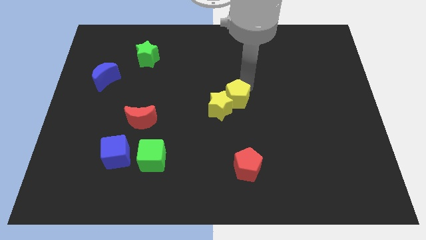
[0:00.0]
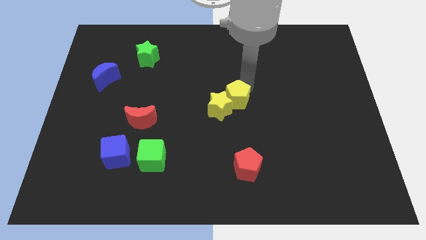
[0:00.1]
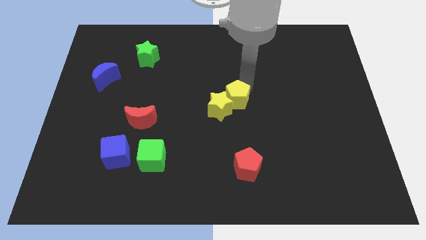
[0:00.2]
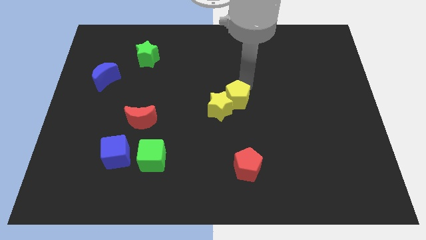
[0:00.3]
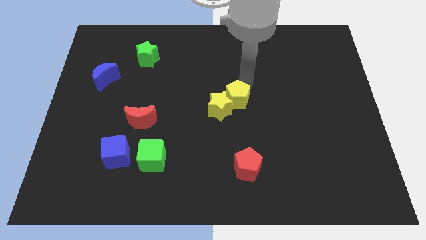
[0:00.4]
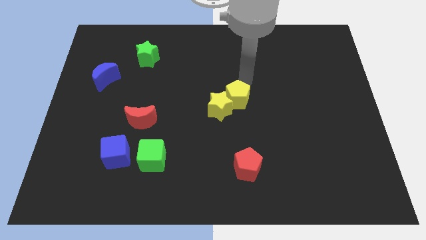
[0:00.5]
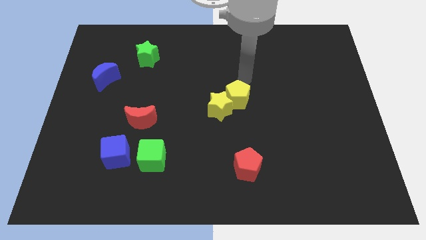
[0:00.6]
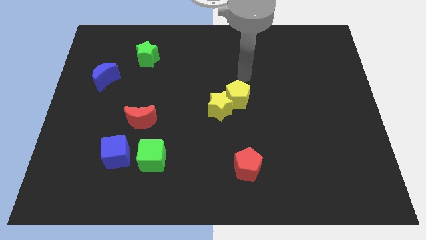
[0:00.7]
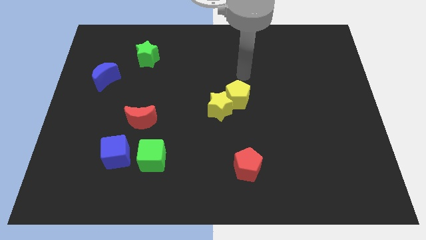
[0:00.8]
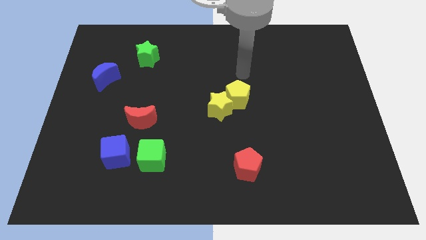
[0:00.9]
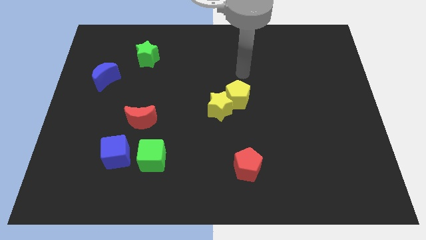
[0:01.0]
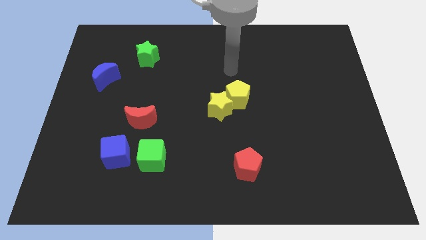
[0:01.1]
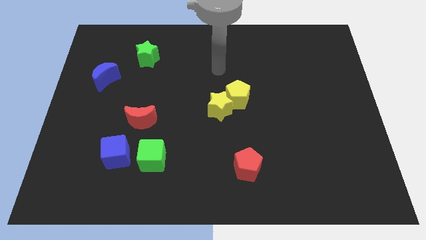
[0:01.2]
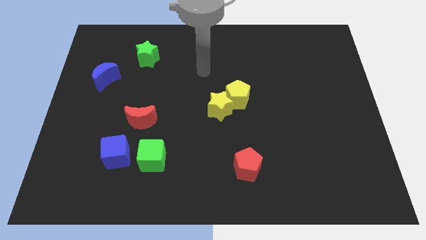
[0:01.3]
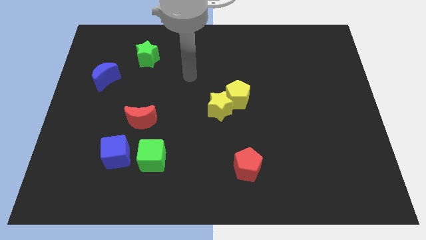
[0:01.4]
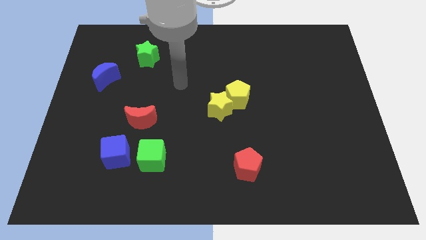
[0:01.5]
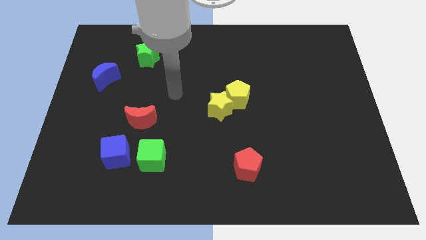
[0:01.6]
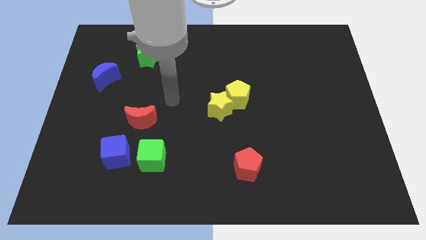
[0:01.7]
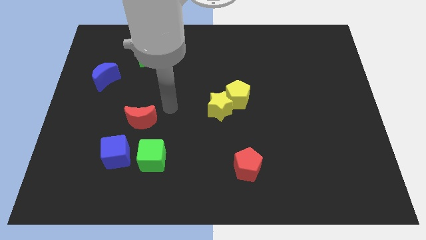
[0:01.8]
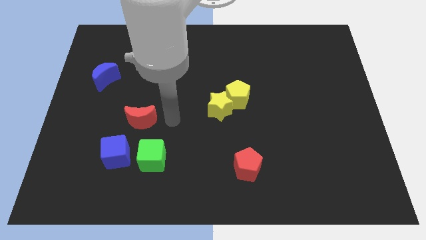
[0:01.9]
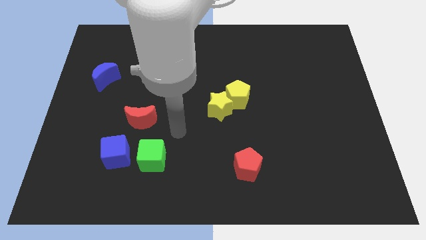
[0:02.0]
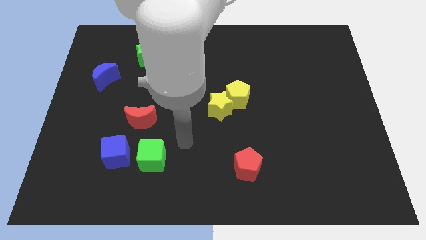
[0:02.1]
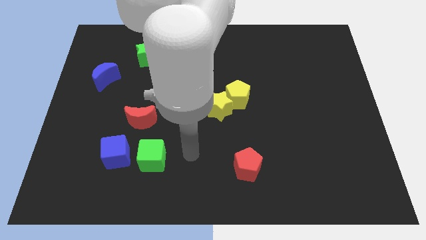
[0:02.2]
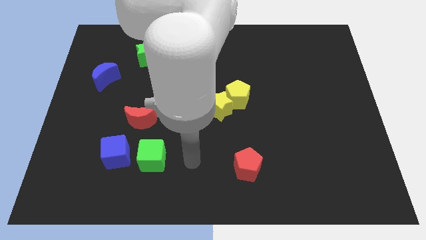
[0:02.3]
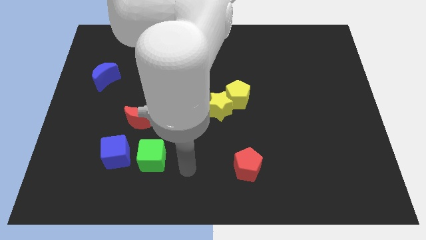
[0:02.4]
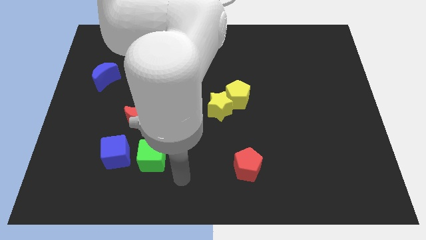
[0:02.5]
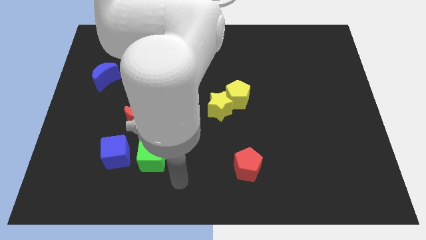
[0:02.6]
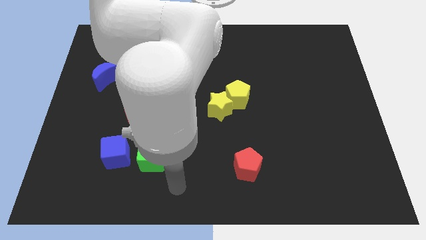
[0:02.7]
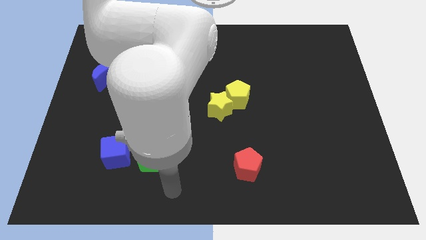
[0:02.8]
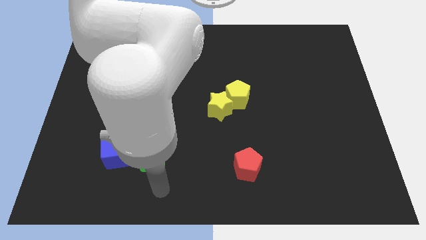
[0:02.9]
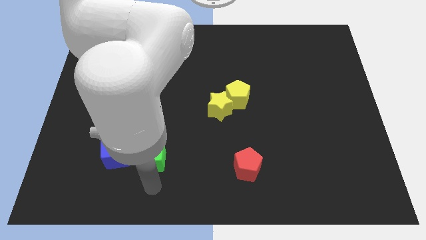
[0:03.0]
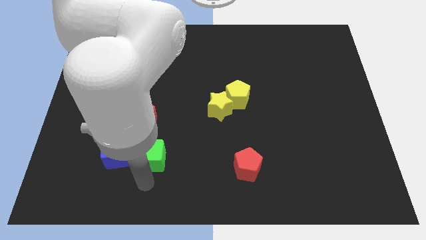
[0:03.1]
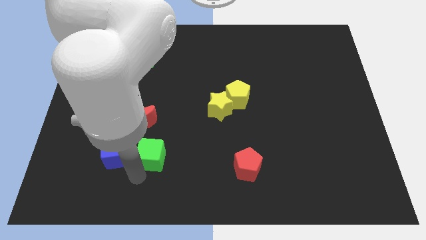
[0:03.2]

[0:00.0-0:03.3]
move the arm at the bottom of the green cube

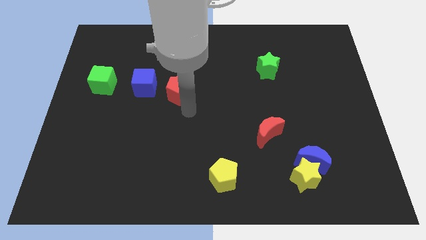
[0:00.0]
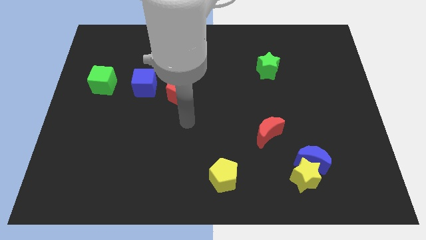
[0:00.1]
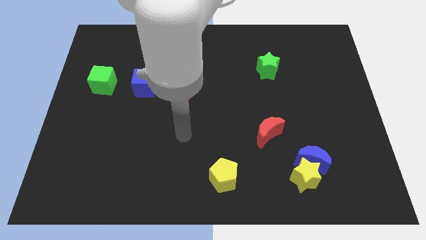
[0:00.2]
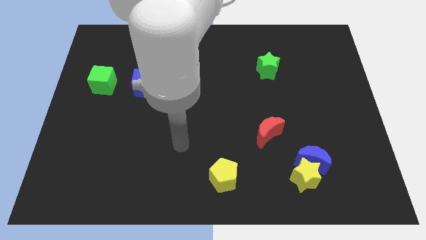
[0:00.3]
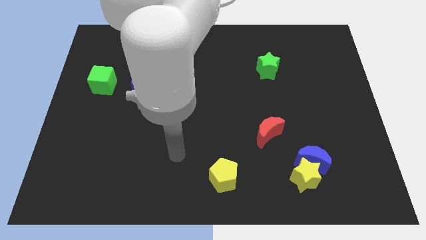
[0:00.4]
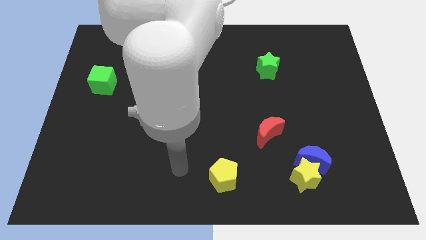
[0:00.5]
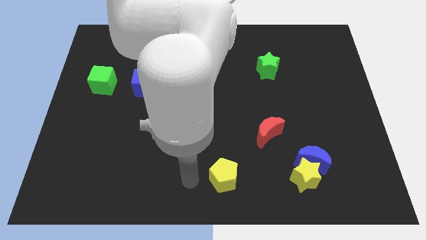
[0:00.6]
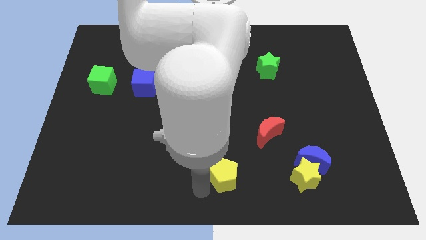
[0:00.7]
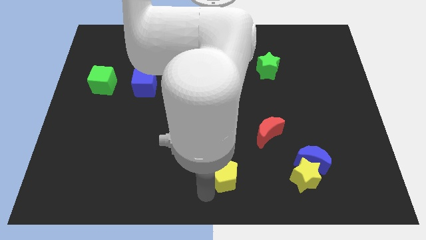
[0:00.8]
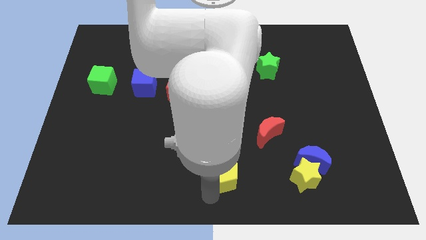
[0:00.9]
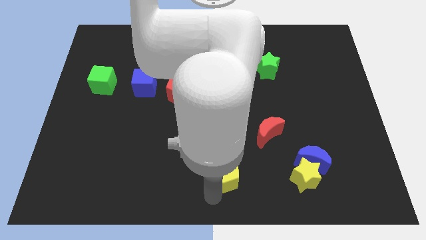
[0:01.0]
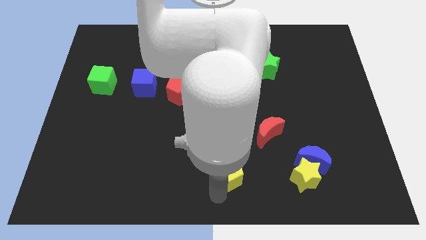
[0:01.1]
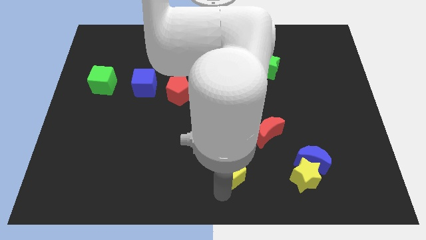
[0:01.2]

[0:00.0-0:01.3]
place the arm towards the yellow pentagon

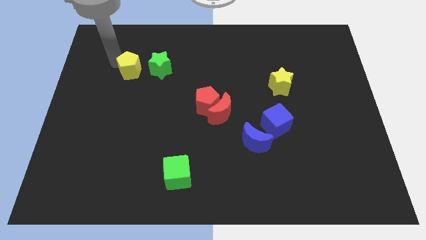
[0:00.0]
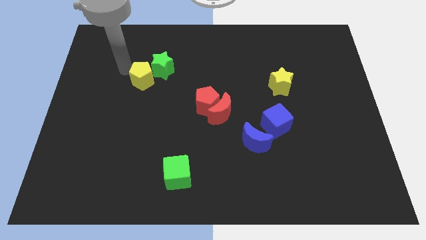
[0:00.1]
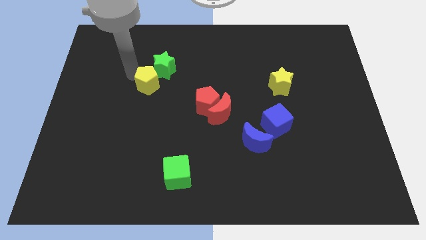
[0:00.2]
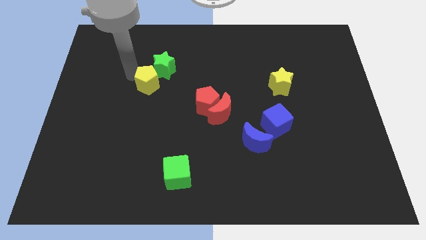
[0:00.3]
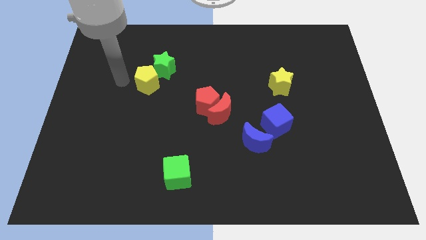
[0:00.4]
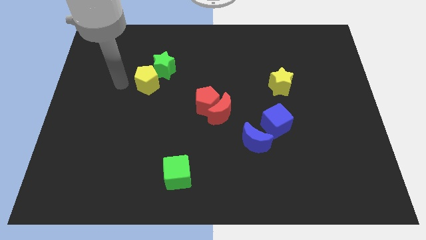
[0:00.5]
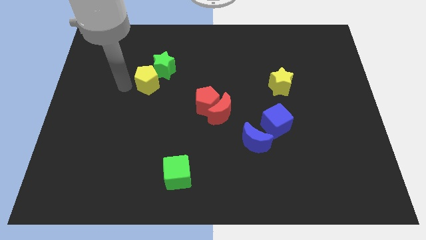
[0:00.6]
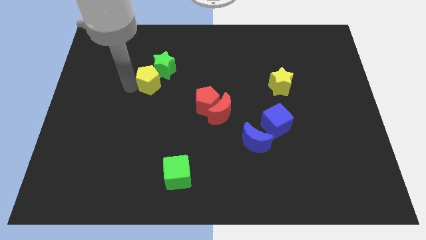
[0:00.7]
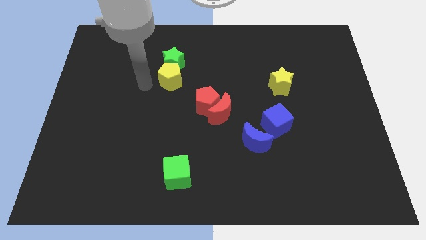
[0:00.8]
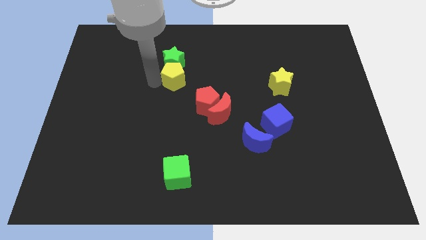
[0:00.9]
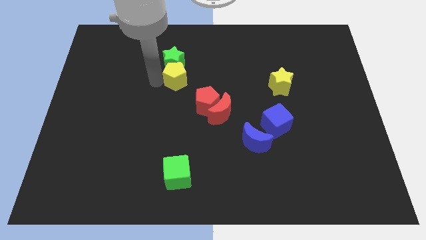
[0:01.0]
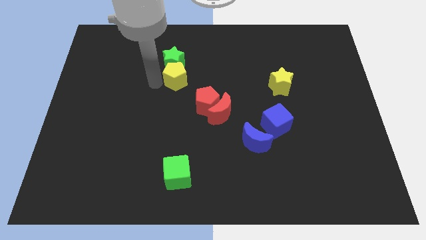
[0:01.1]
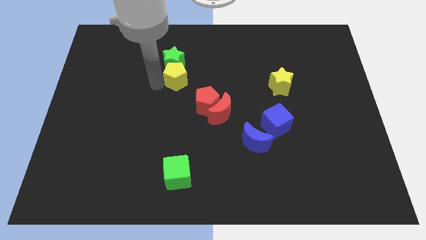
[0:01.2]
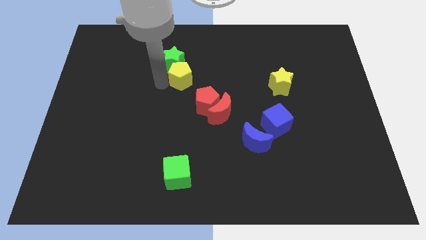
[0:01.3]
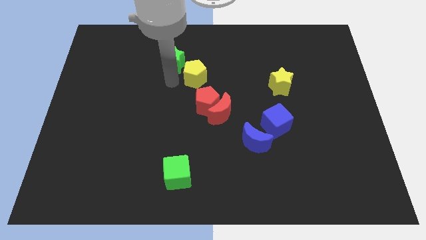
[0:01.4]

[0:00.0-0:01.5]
move the yellow pentagon on top of the red pentagon

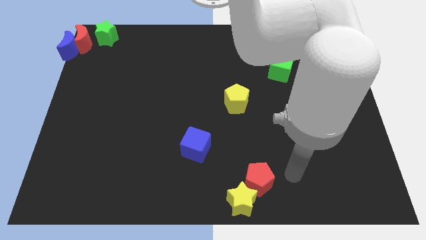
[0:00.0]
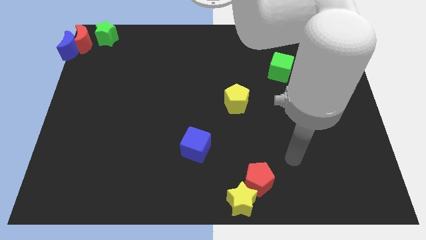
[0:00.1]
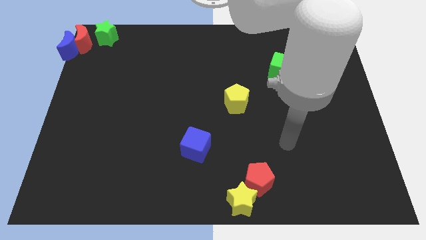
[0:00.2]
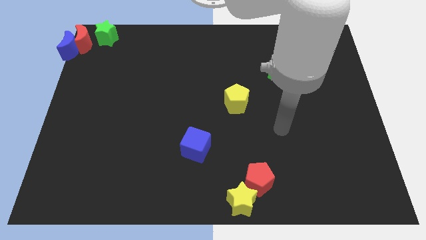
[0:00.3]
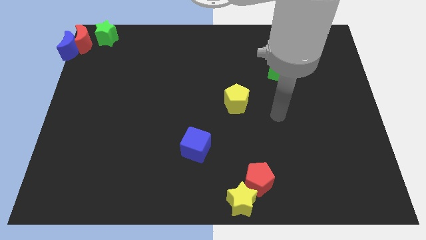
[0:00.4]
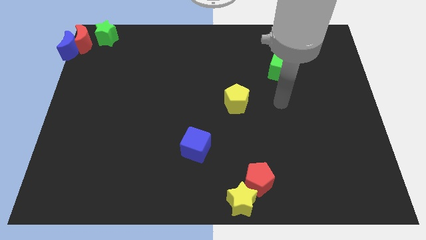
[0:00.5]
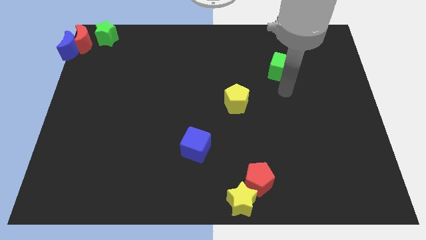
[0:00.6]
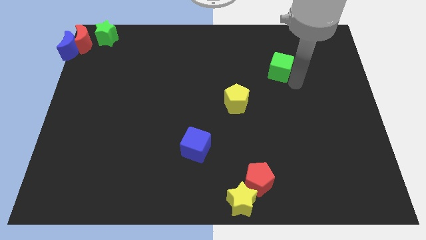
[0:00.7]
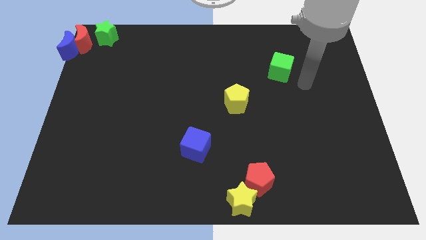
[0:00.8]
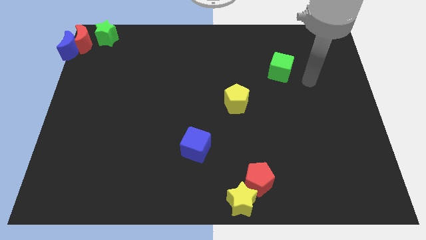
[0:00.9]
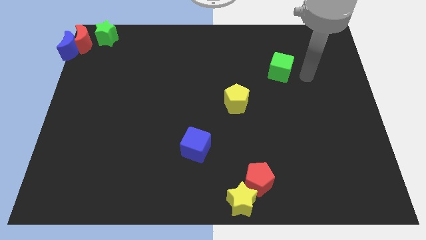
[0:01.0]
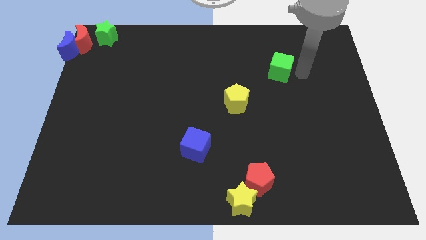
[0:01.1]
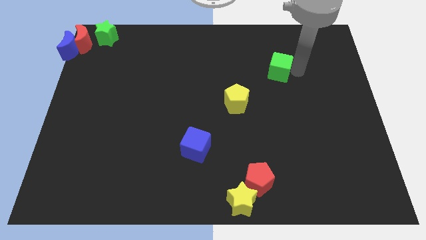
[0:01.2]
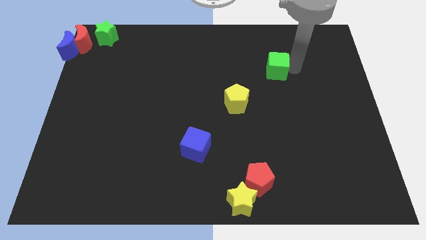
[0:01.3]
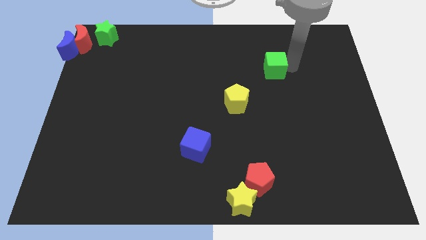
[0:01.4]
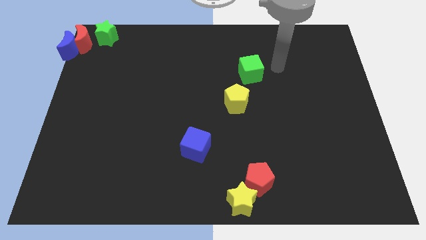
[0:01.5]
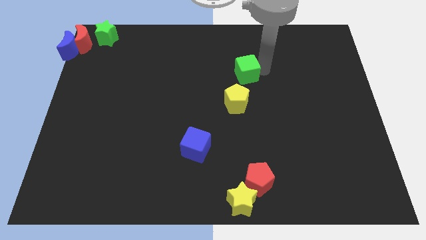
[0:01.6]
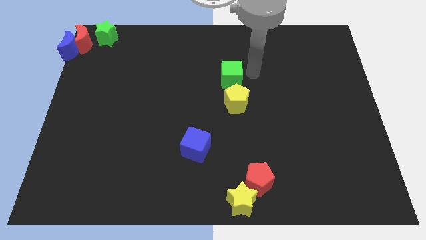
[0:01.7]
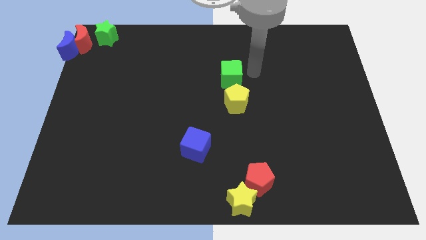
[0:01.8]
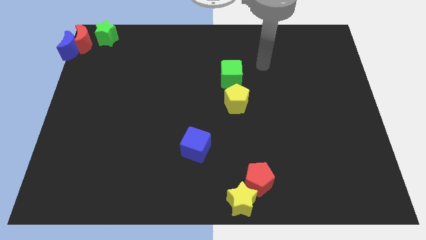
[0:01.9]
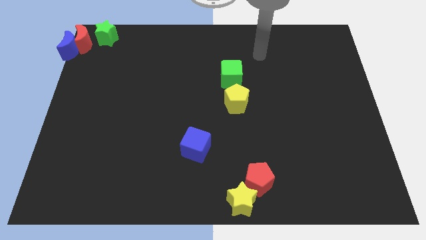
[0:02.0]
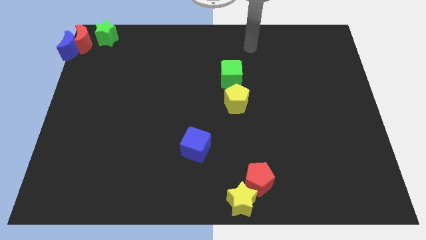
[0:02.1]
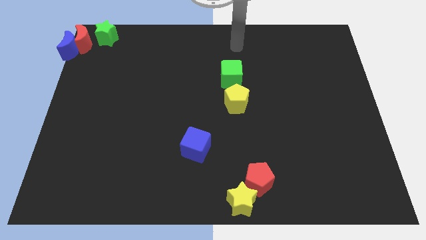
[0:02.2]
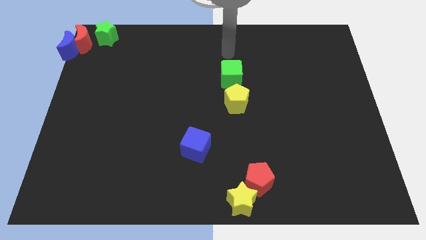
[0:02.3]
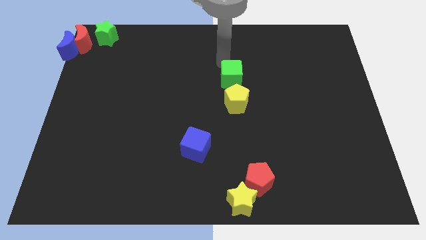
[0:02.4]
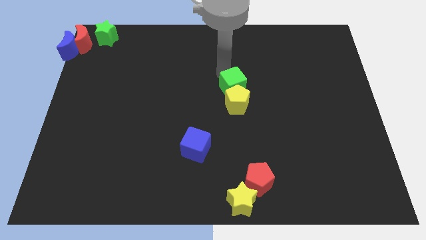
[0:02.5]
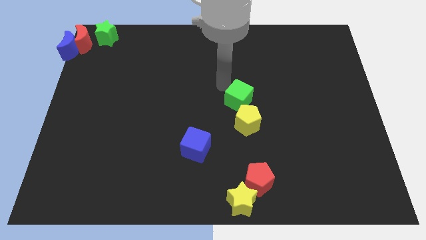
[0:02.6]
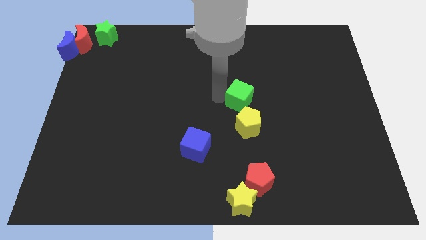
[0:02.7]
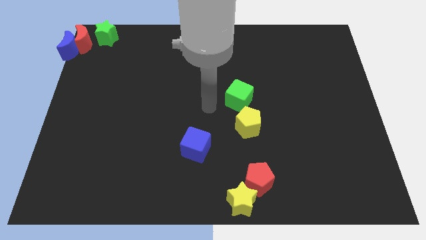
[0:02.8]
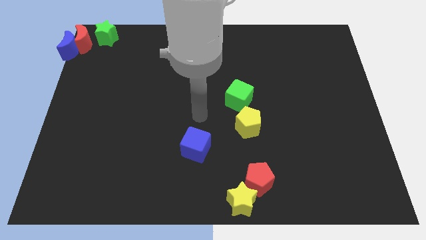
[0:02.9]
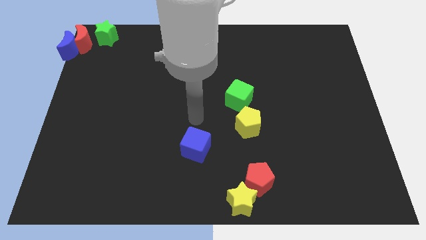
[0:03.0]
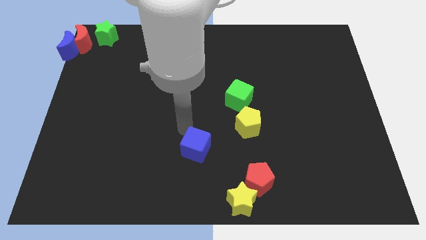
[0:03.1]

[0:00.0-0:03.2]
slide the green cube into the yellow pentagon
